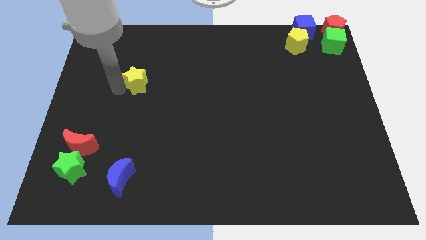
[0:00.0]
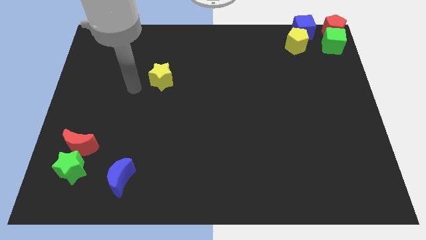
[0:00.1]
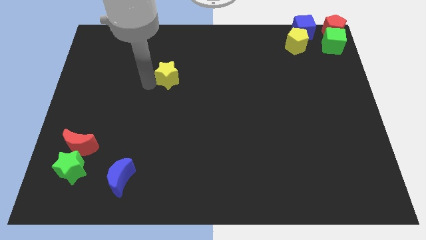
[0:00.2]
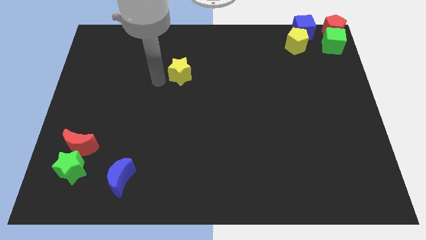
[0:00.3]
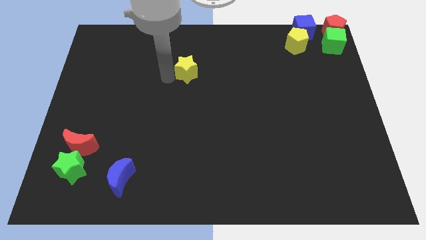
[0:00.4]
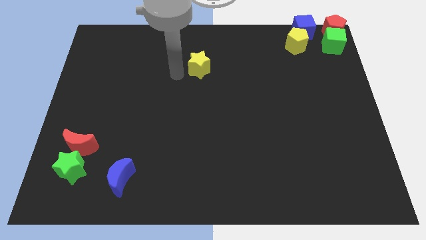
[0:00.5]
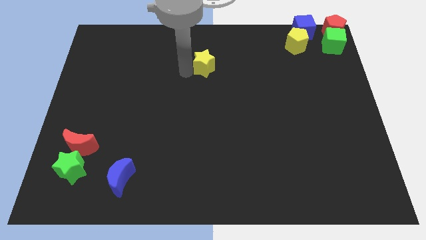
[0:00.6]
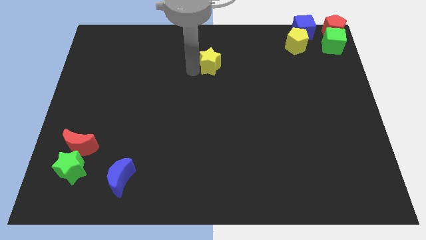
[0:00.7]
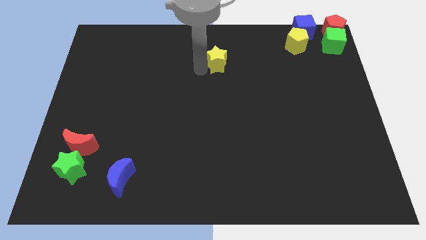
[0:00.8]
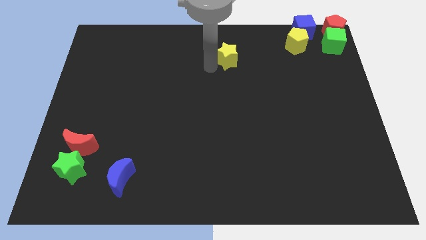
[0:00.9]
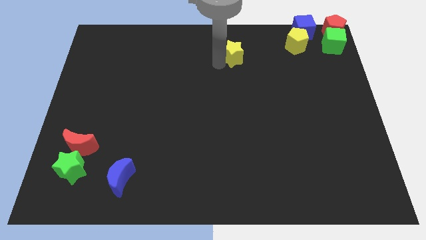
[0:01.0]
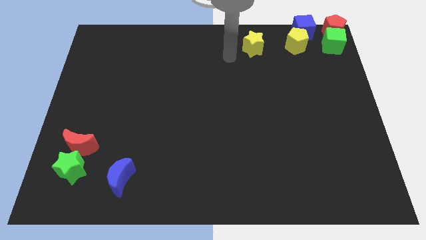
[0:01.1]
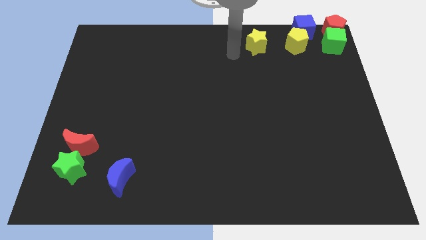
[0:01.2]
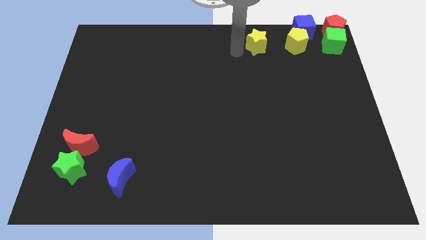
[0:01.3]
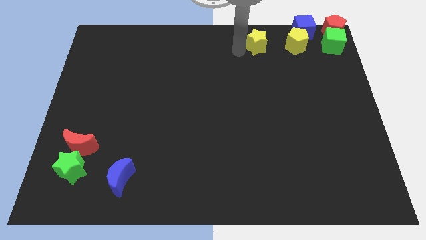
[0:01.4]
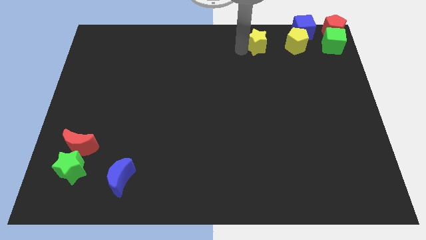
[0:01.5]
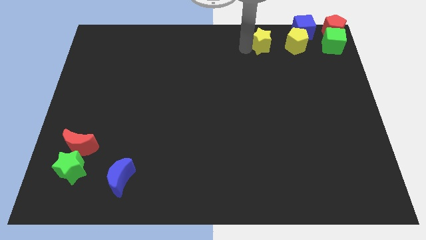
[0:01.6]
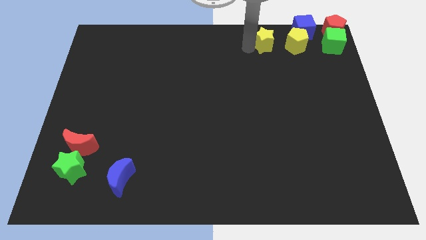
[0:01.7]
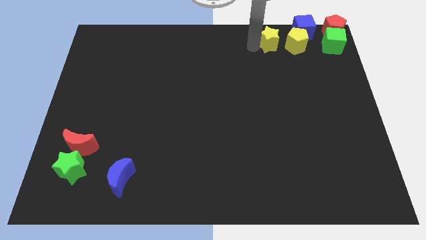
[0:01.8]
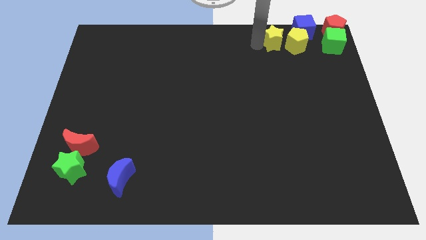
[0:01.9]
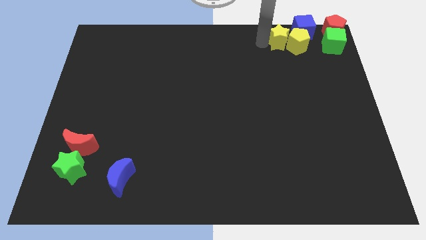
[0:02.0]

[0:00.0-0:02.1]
push yellow star into the yellow pentagon

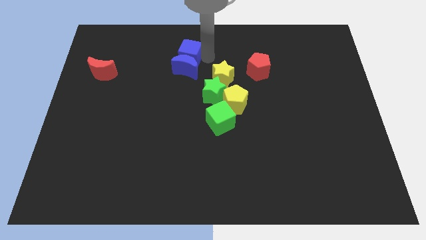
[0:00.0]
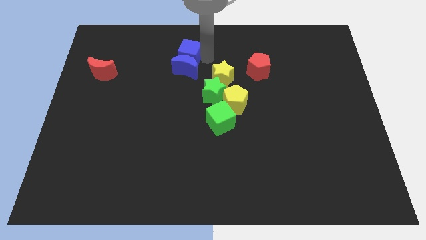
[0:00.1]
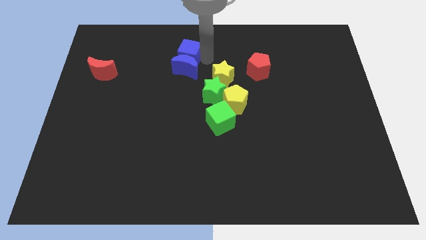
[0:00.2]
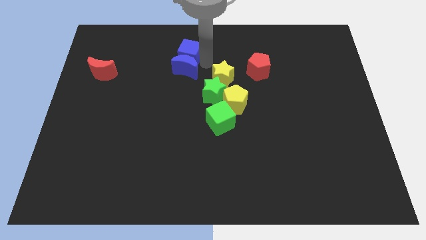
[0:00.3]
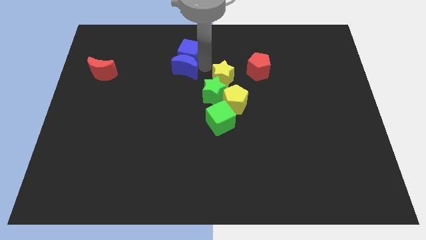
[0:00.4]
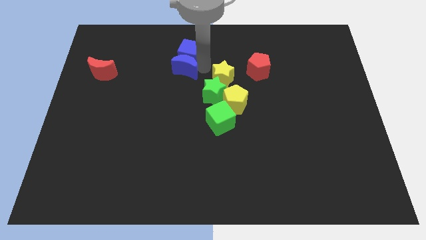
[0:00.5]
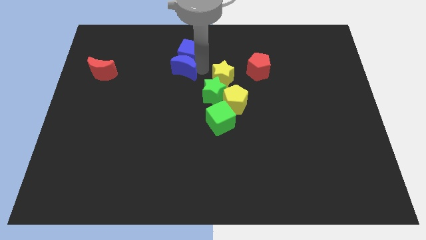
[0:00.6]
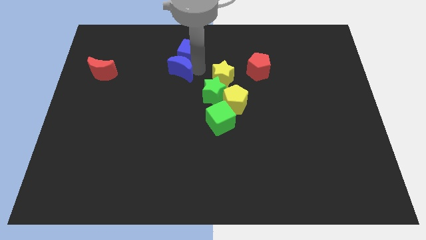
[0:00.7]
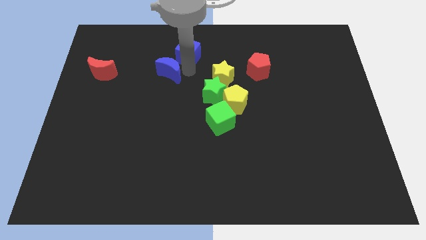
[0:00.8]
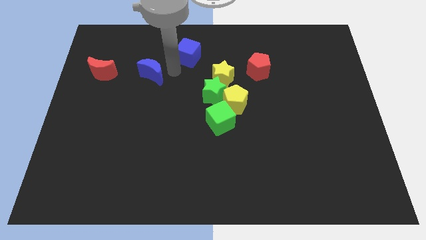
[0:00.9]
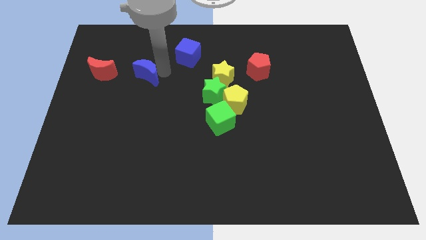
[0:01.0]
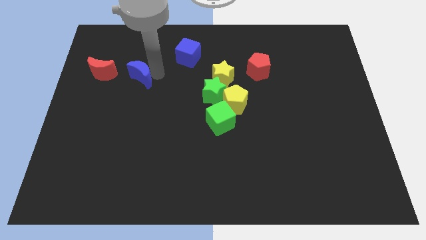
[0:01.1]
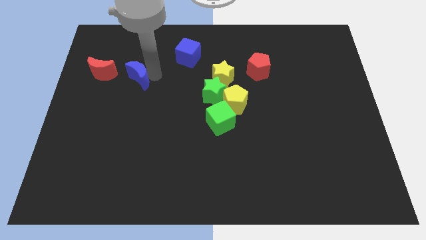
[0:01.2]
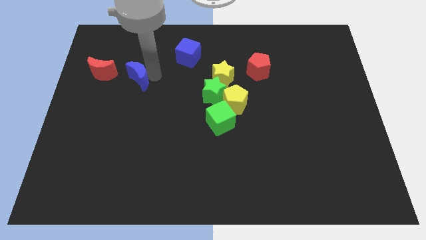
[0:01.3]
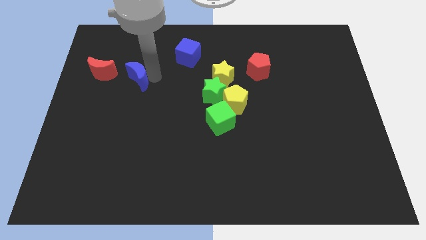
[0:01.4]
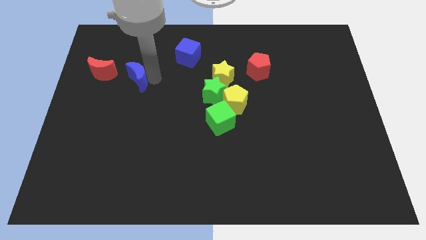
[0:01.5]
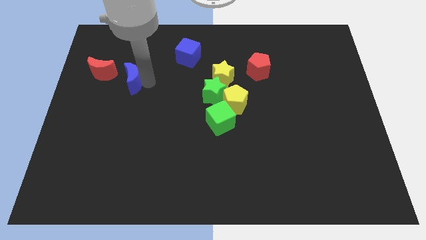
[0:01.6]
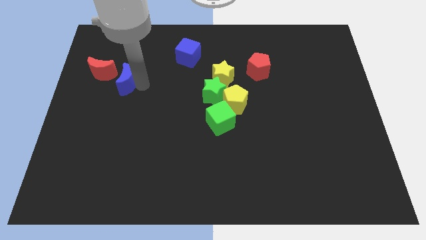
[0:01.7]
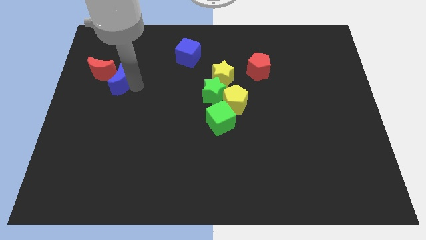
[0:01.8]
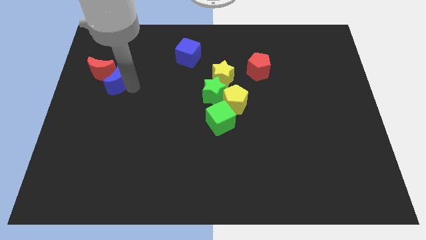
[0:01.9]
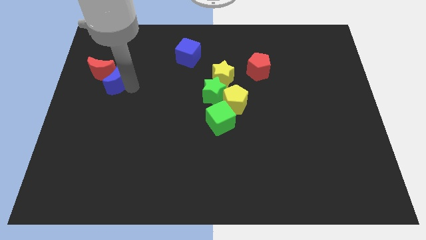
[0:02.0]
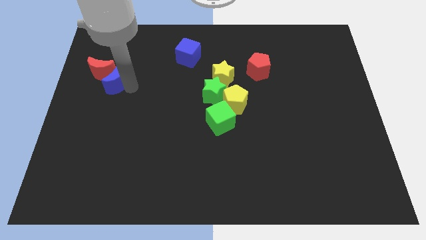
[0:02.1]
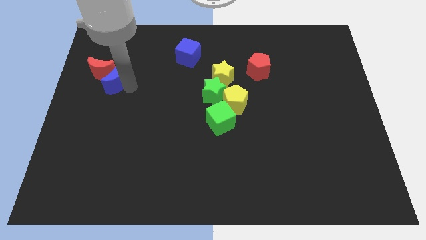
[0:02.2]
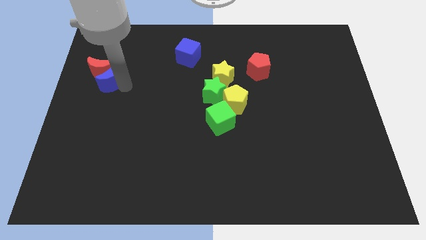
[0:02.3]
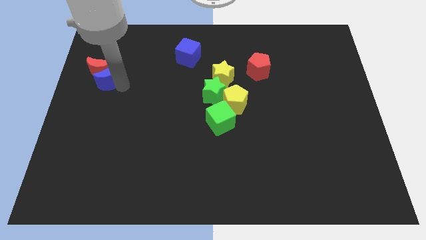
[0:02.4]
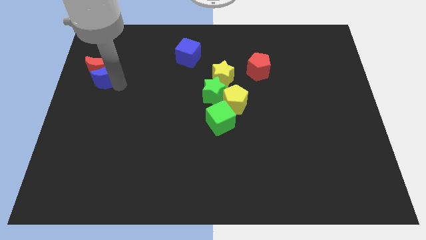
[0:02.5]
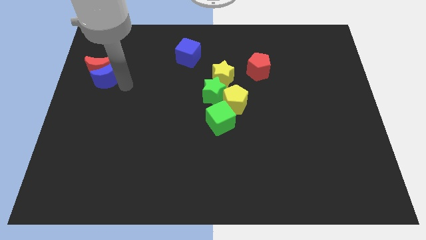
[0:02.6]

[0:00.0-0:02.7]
separate the blue moon with blue cube close to the red moon

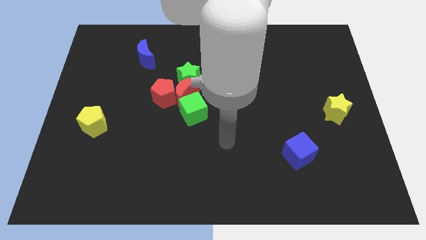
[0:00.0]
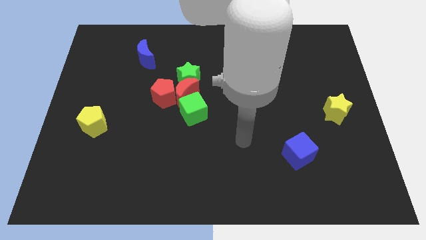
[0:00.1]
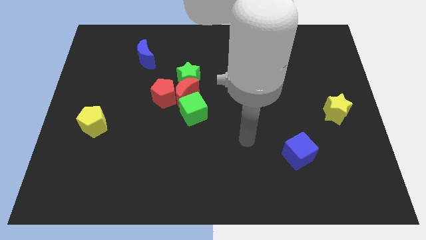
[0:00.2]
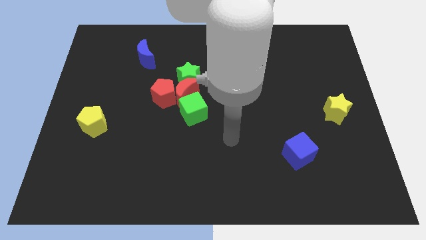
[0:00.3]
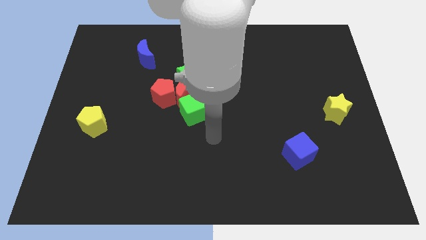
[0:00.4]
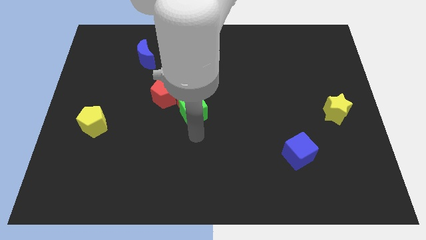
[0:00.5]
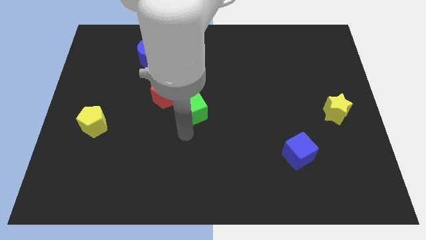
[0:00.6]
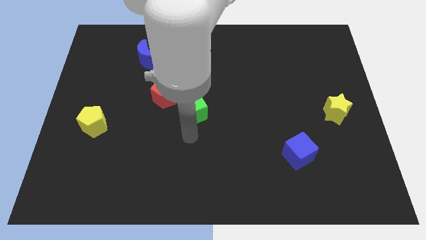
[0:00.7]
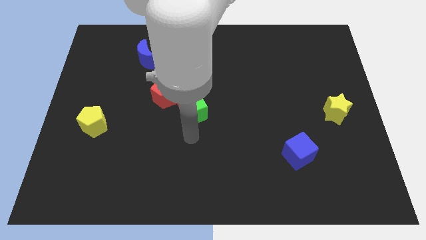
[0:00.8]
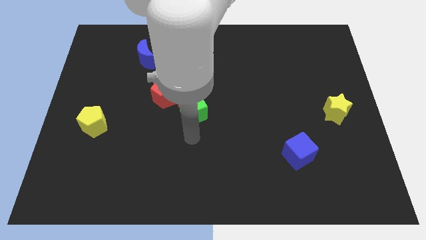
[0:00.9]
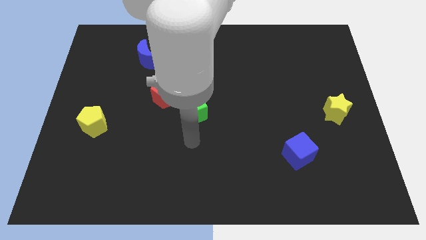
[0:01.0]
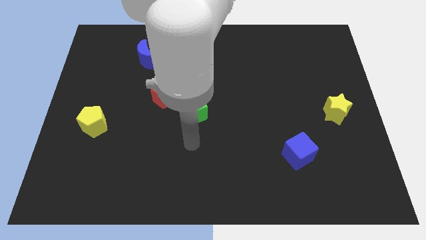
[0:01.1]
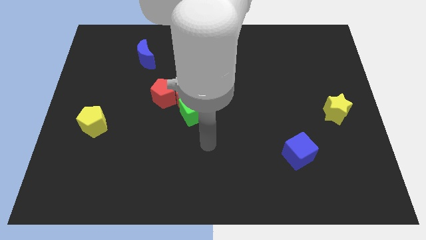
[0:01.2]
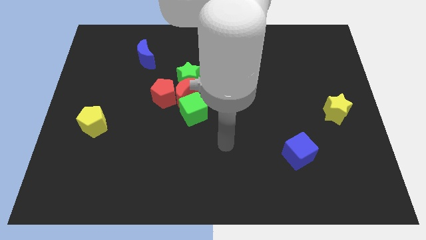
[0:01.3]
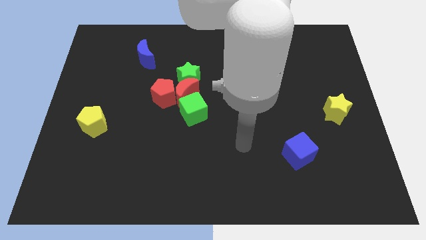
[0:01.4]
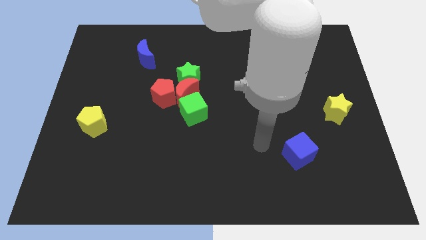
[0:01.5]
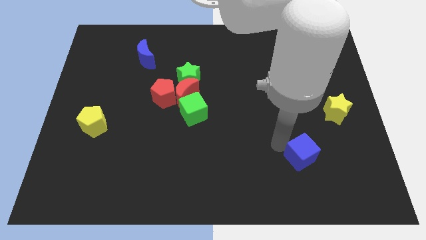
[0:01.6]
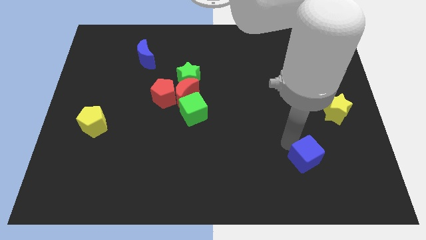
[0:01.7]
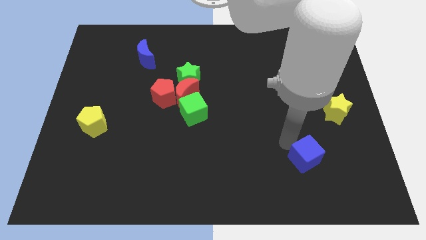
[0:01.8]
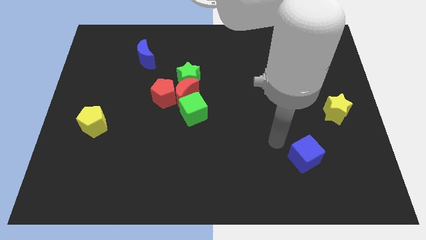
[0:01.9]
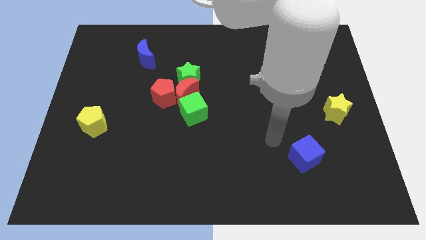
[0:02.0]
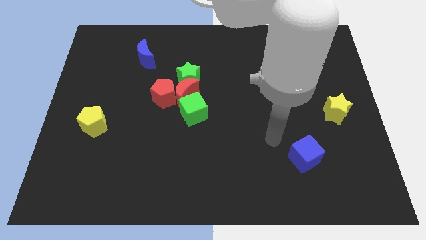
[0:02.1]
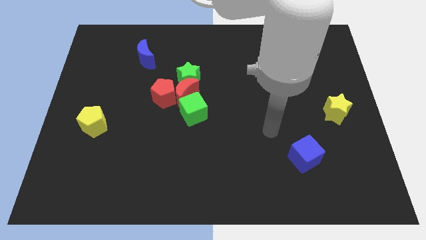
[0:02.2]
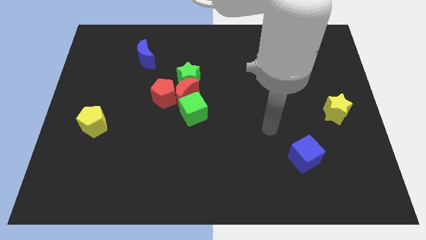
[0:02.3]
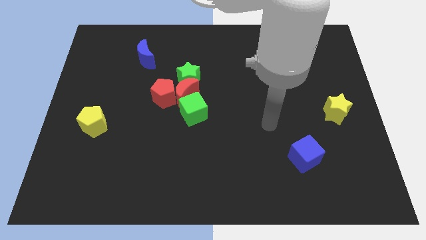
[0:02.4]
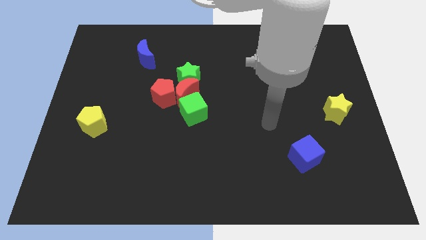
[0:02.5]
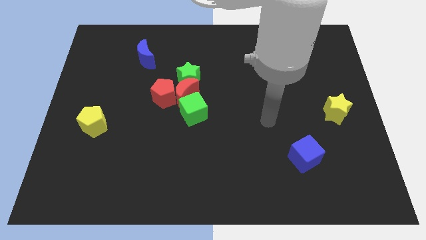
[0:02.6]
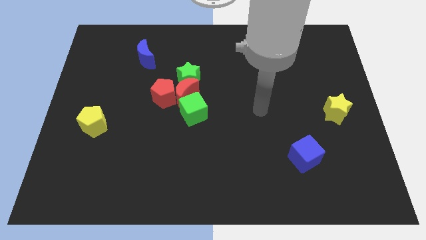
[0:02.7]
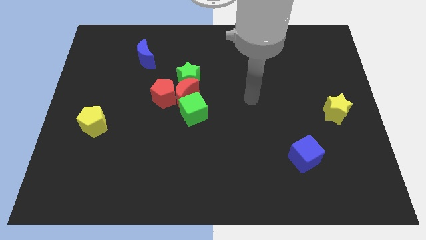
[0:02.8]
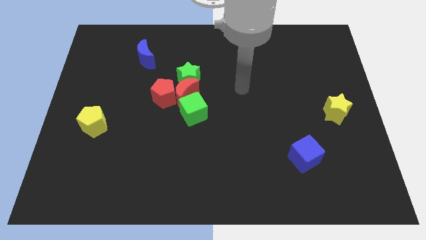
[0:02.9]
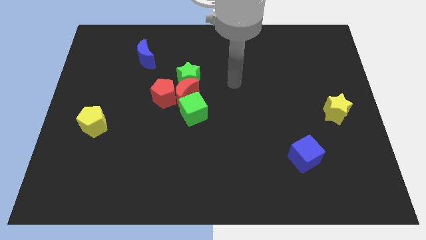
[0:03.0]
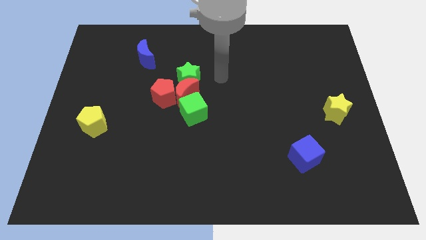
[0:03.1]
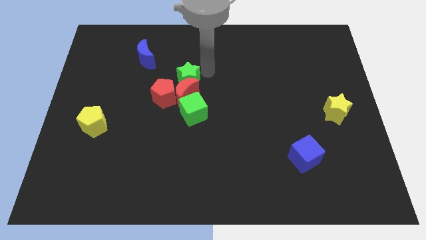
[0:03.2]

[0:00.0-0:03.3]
put your hand parallel right to the green star

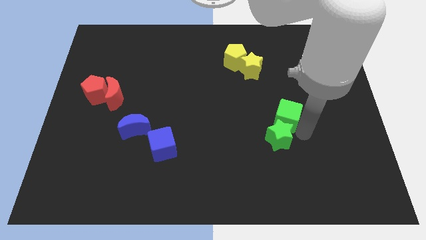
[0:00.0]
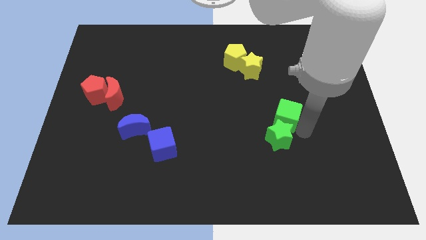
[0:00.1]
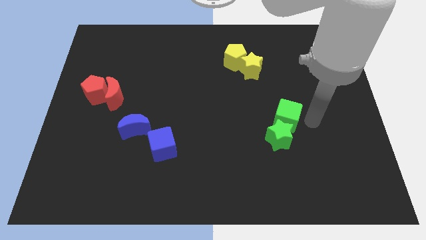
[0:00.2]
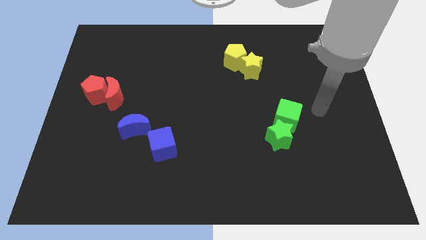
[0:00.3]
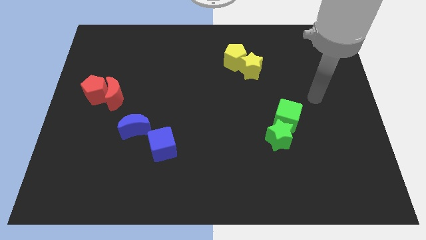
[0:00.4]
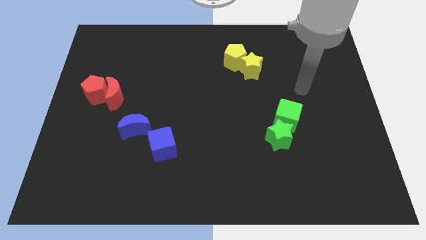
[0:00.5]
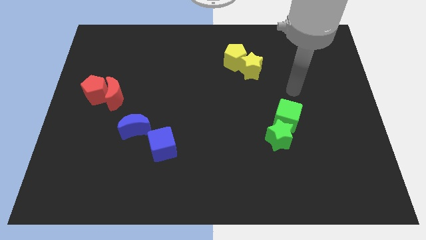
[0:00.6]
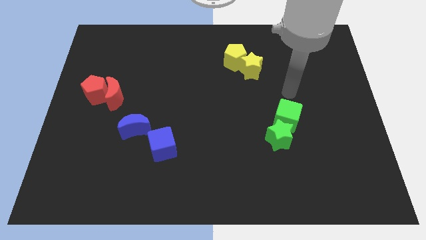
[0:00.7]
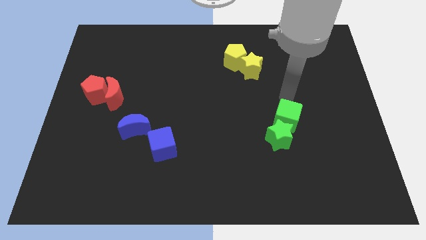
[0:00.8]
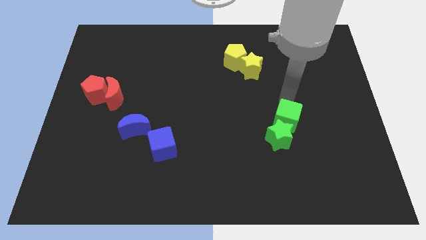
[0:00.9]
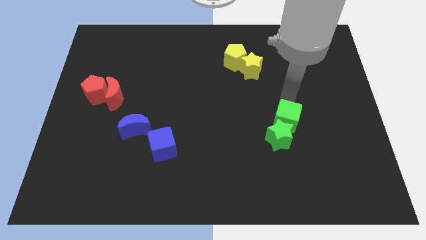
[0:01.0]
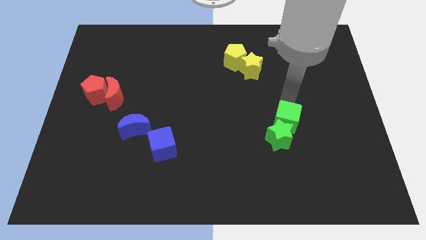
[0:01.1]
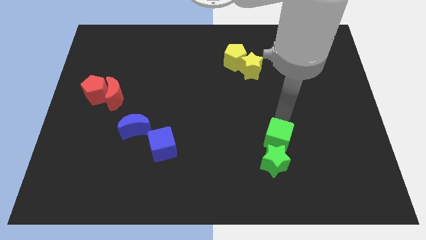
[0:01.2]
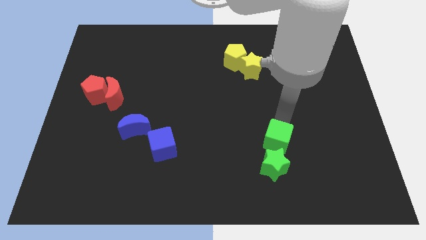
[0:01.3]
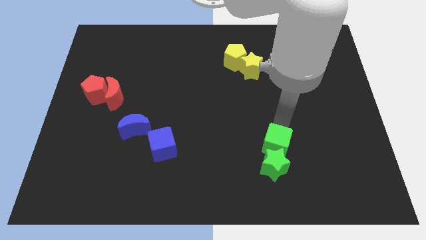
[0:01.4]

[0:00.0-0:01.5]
move the green blocks slightly to the bottom
